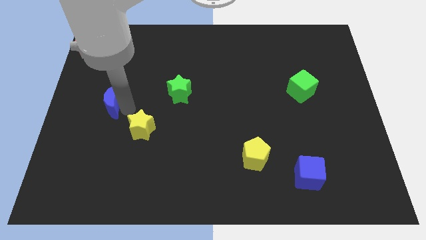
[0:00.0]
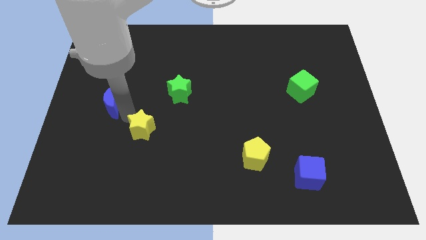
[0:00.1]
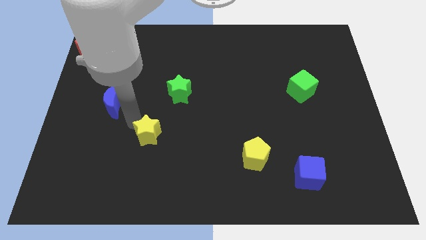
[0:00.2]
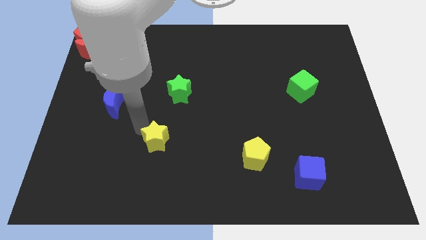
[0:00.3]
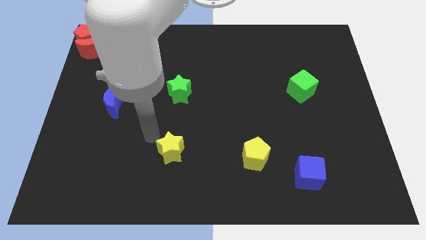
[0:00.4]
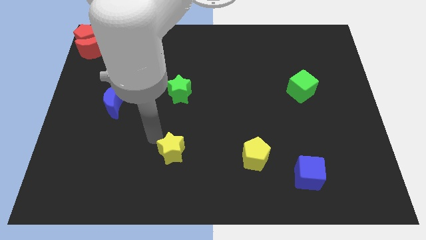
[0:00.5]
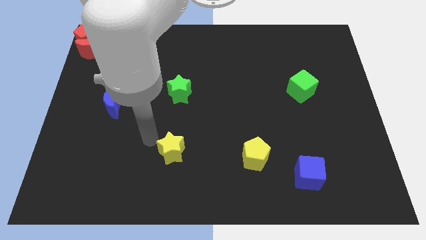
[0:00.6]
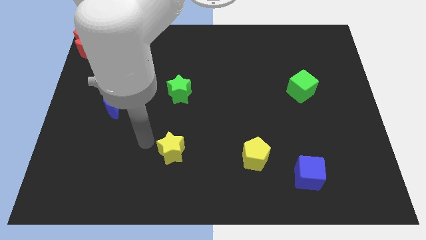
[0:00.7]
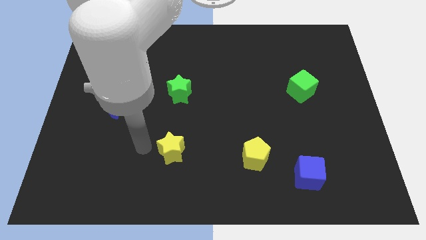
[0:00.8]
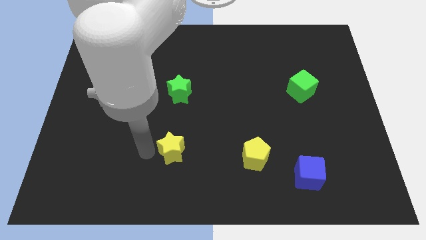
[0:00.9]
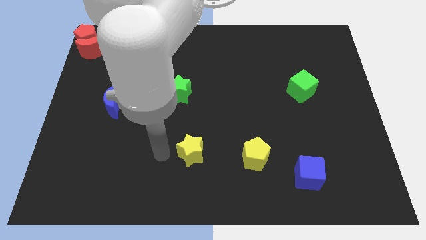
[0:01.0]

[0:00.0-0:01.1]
push yellow star downwards of the board

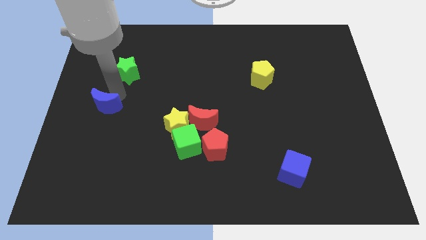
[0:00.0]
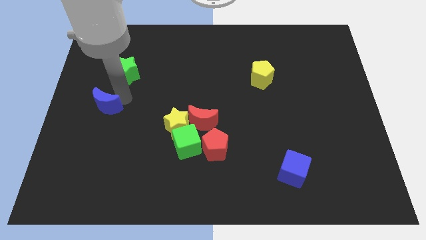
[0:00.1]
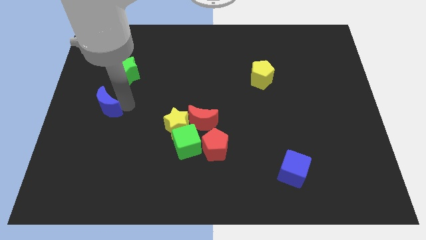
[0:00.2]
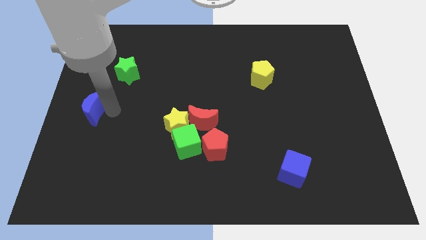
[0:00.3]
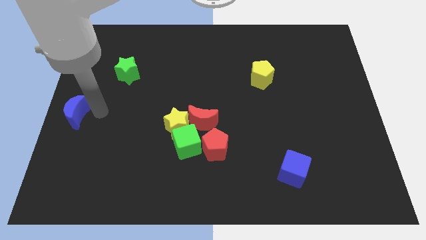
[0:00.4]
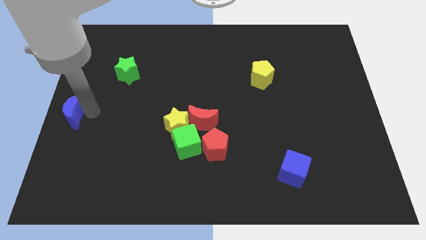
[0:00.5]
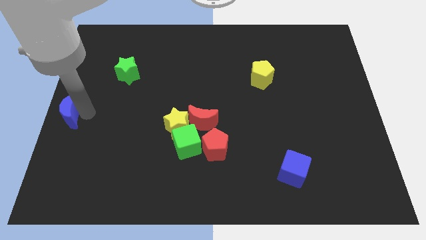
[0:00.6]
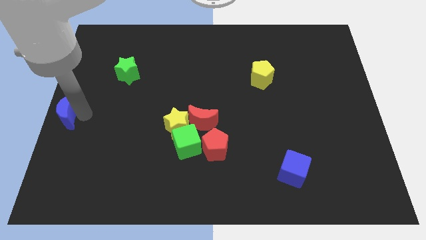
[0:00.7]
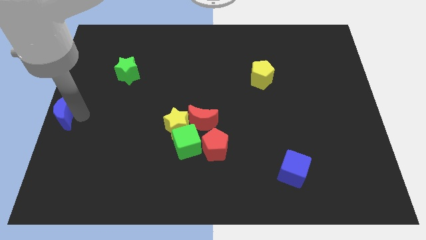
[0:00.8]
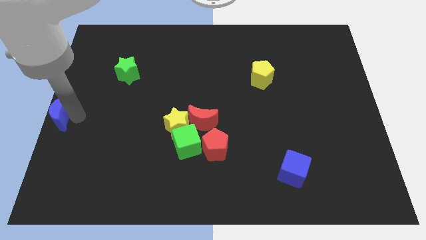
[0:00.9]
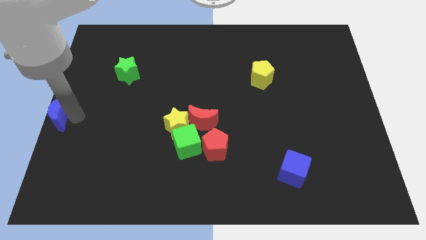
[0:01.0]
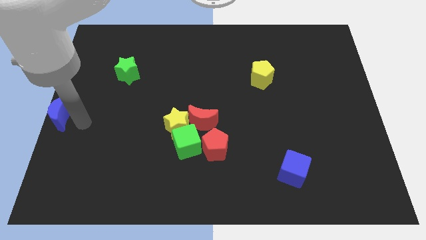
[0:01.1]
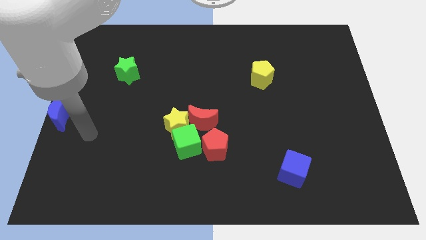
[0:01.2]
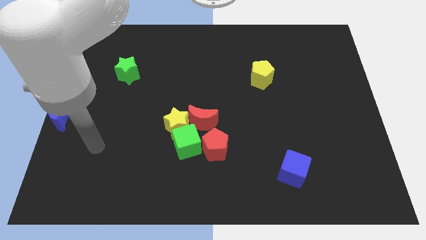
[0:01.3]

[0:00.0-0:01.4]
place the blue crescent at the left center of the board

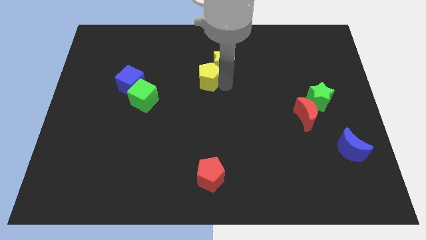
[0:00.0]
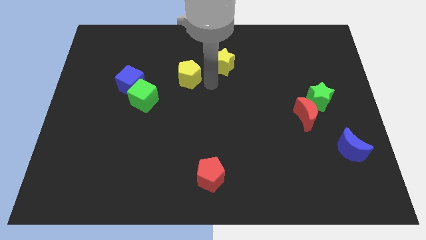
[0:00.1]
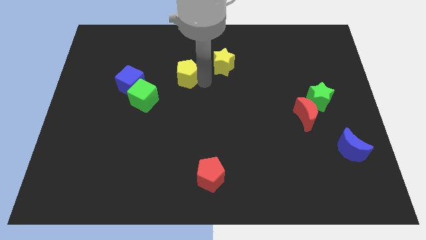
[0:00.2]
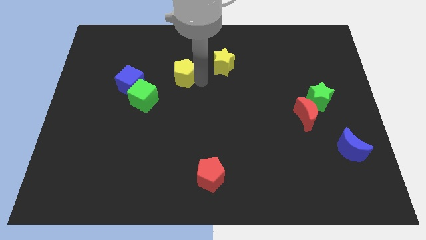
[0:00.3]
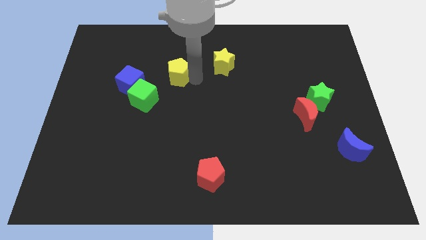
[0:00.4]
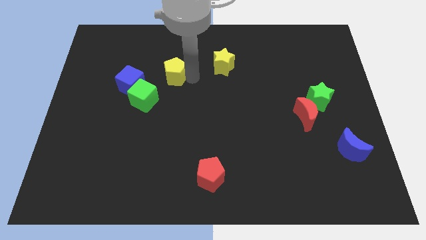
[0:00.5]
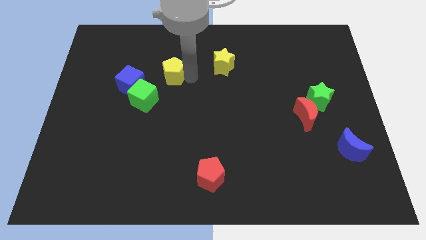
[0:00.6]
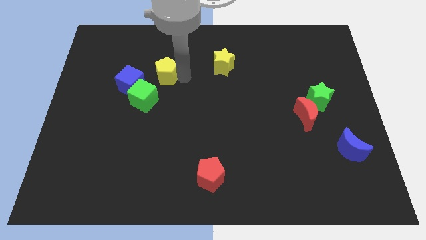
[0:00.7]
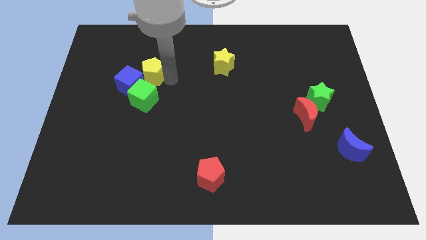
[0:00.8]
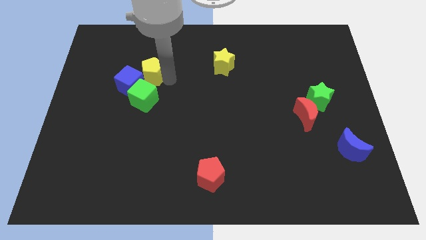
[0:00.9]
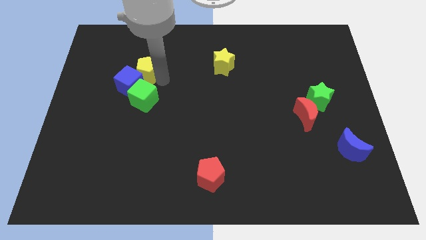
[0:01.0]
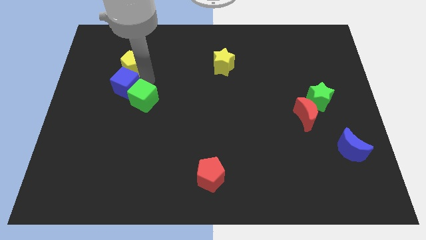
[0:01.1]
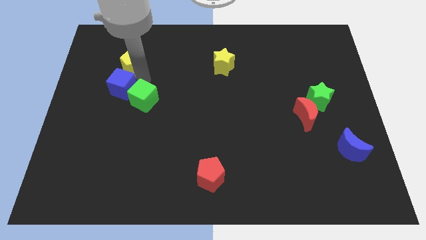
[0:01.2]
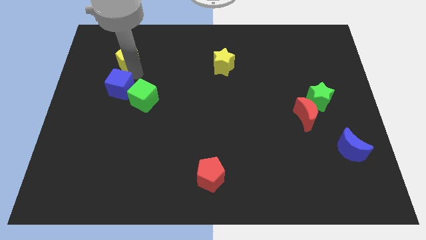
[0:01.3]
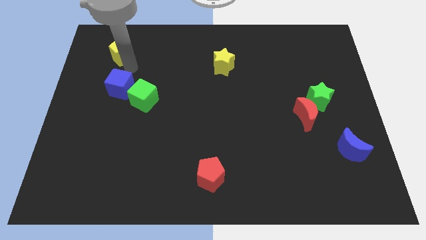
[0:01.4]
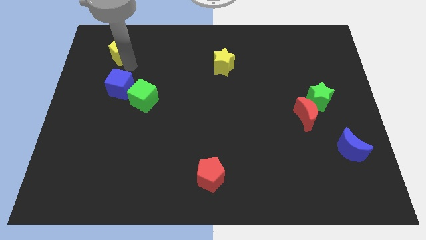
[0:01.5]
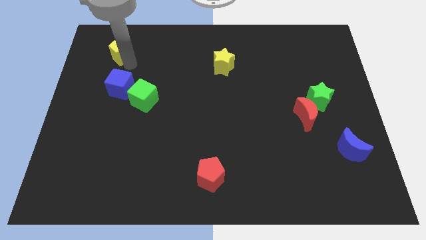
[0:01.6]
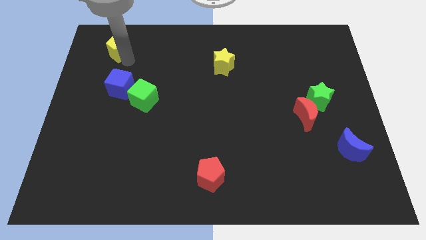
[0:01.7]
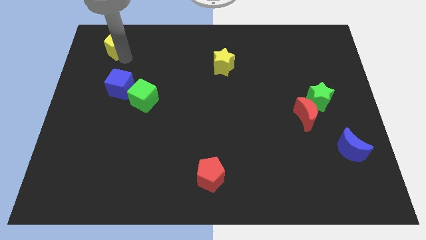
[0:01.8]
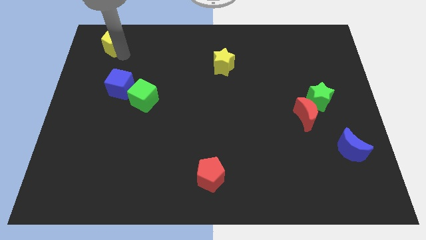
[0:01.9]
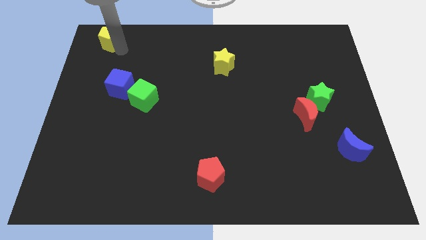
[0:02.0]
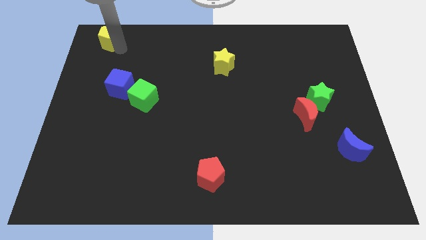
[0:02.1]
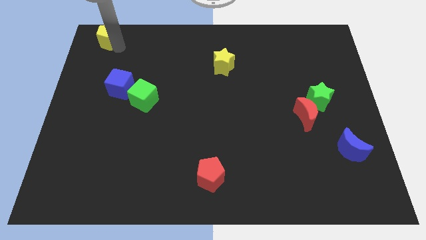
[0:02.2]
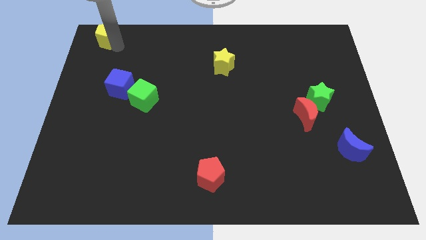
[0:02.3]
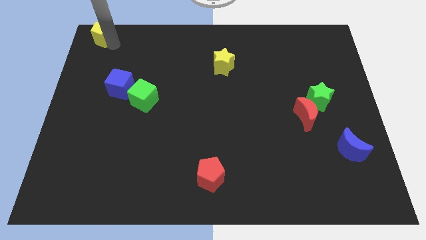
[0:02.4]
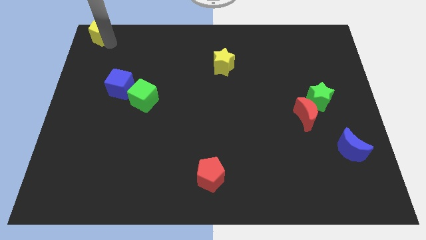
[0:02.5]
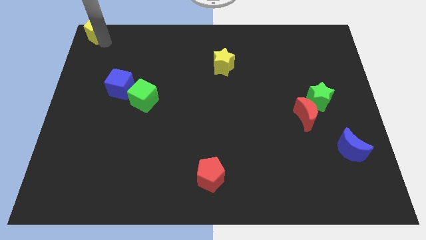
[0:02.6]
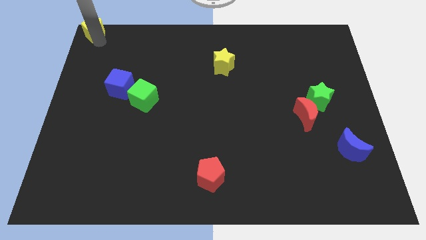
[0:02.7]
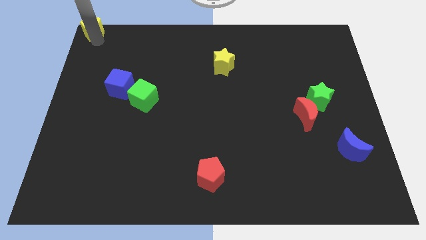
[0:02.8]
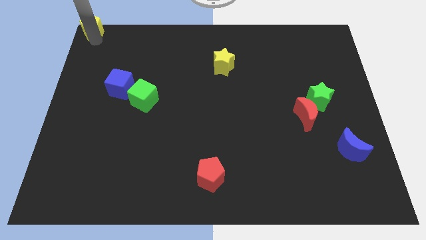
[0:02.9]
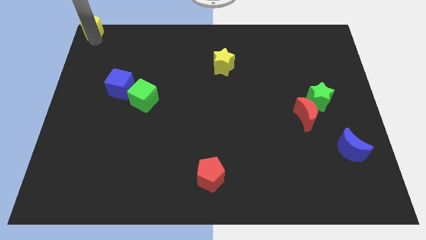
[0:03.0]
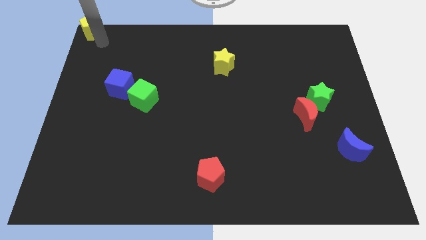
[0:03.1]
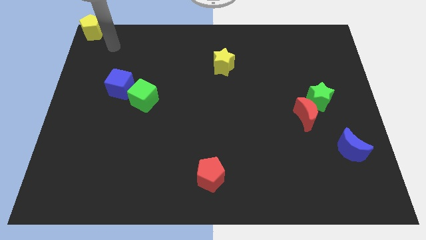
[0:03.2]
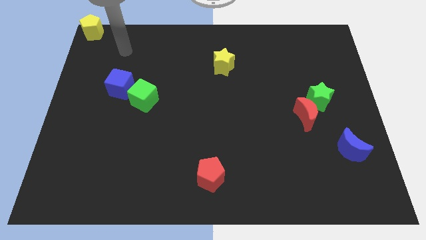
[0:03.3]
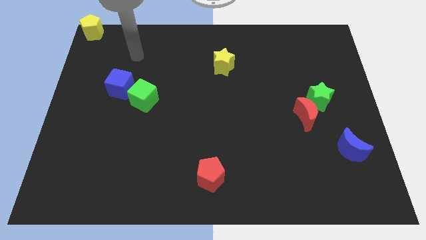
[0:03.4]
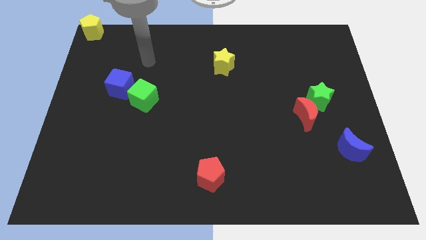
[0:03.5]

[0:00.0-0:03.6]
place yellow pentagon to the top left corner of the board

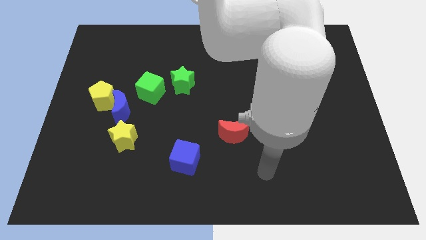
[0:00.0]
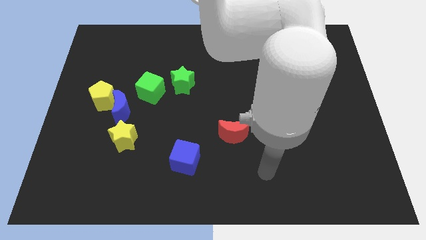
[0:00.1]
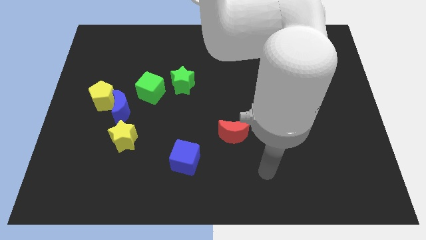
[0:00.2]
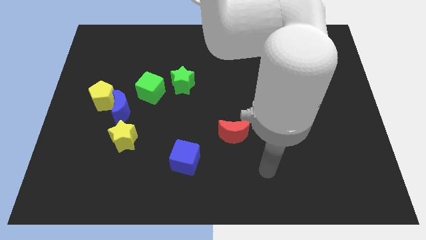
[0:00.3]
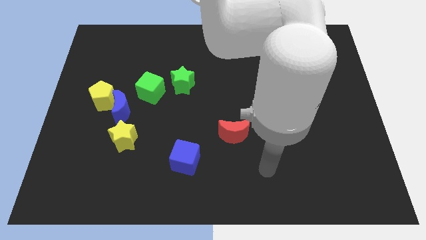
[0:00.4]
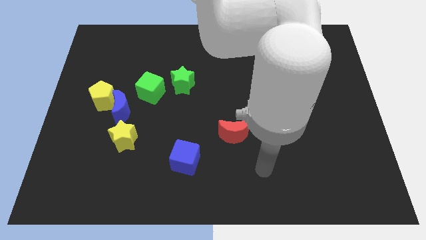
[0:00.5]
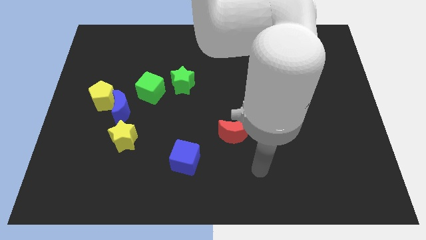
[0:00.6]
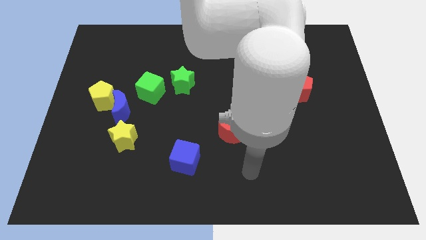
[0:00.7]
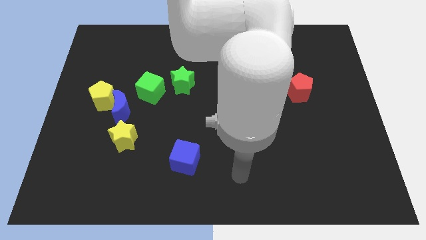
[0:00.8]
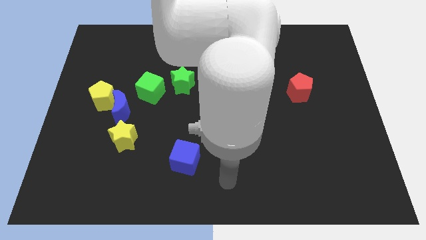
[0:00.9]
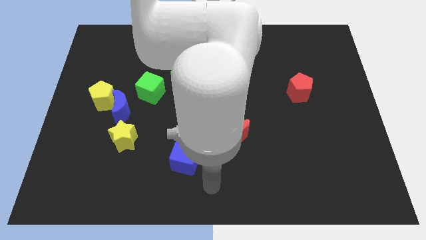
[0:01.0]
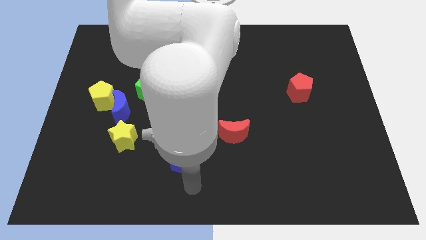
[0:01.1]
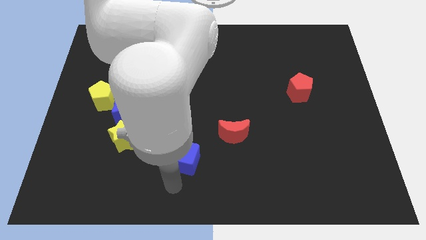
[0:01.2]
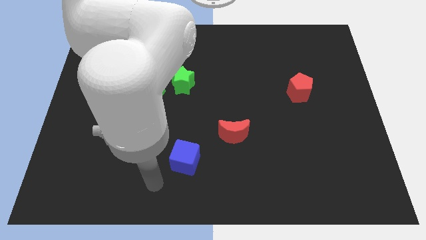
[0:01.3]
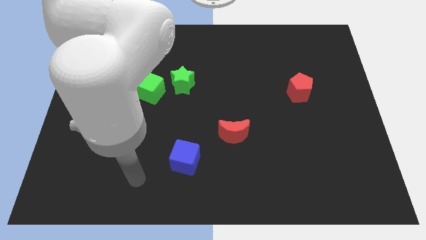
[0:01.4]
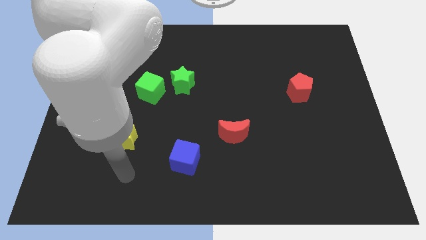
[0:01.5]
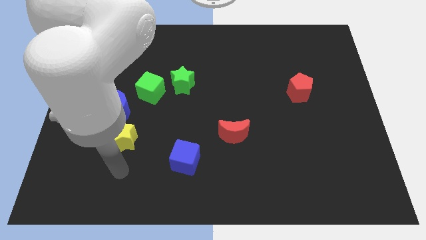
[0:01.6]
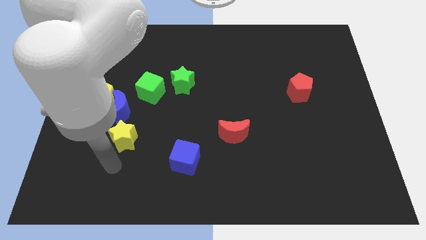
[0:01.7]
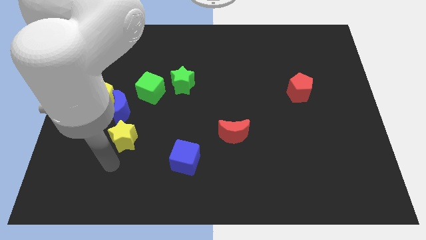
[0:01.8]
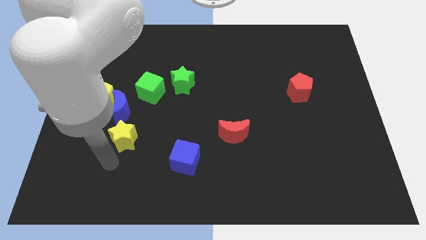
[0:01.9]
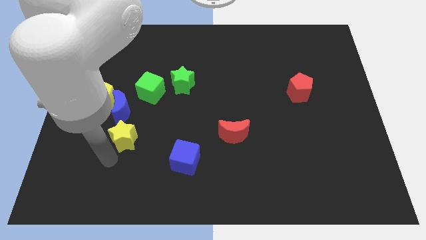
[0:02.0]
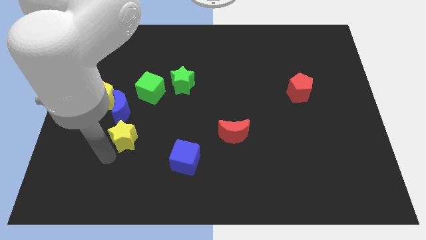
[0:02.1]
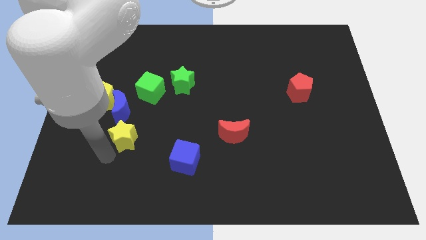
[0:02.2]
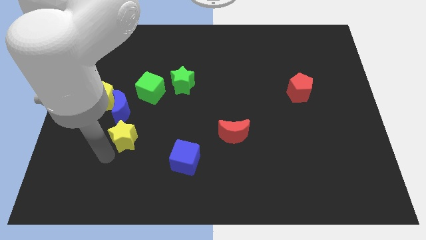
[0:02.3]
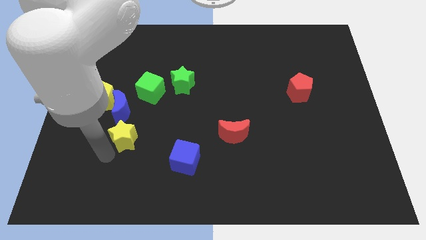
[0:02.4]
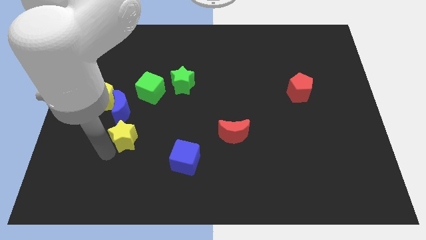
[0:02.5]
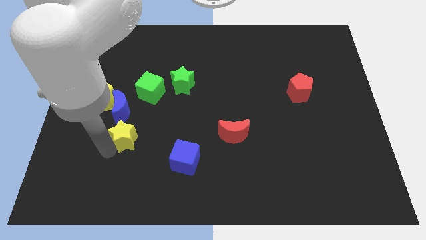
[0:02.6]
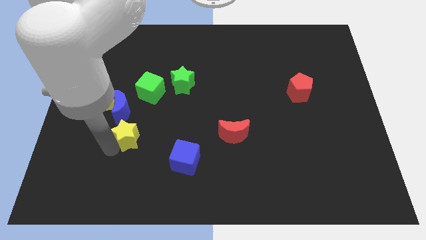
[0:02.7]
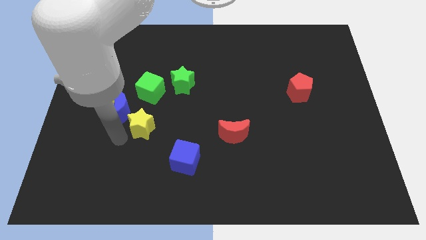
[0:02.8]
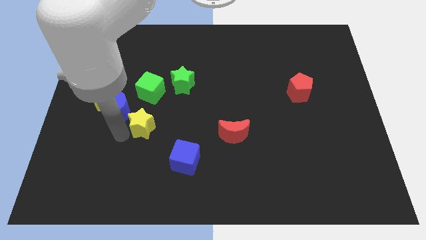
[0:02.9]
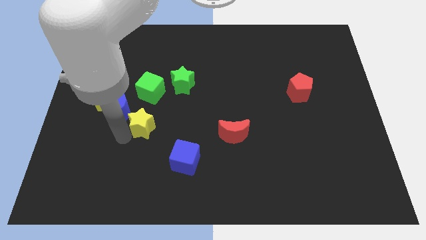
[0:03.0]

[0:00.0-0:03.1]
place the yellow star diagonally top left to the blue cube
